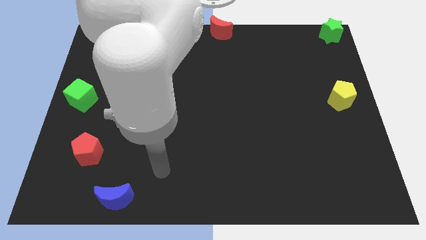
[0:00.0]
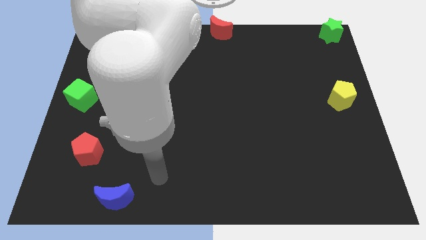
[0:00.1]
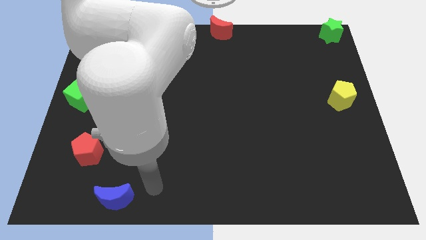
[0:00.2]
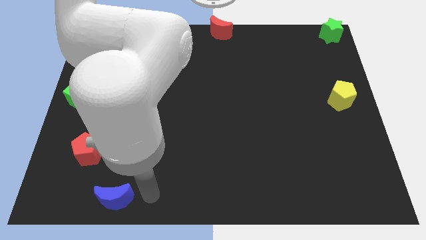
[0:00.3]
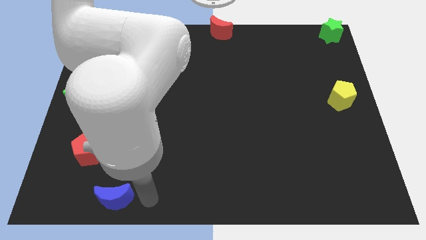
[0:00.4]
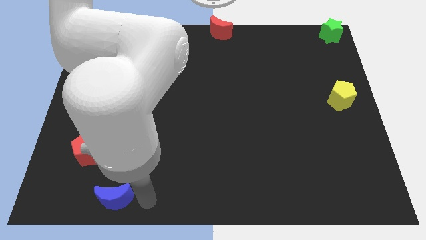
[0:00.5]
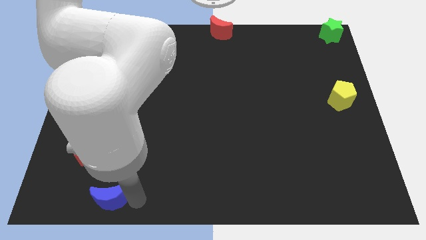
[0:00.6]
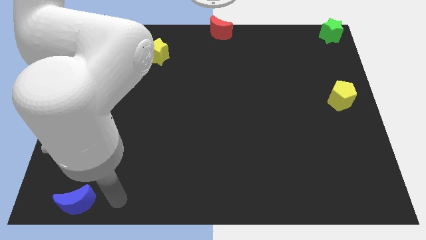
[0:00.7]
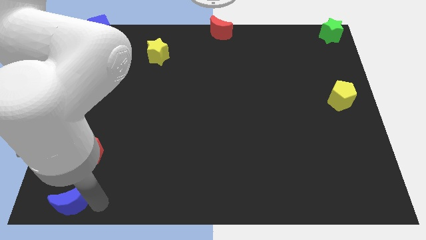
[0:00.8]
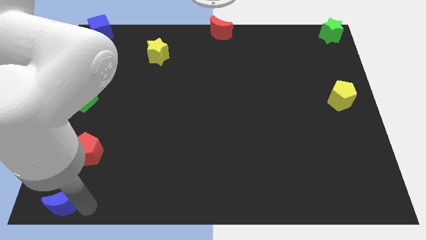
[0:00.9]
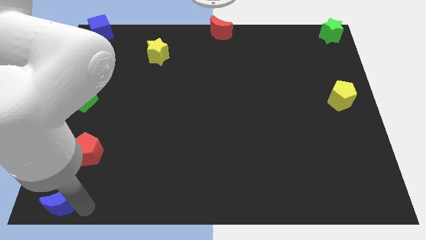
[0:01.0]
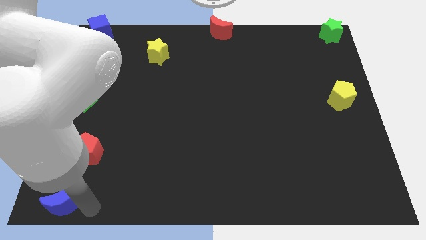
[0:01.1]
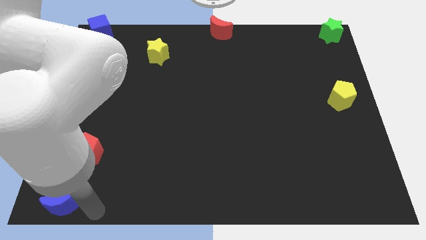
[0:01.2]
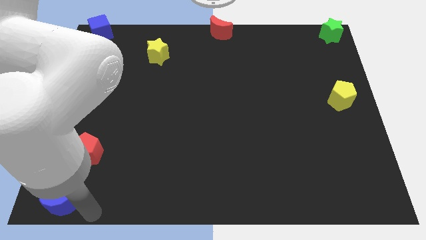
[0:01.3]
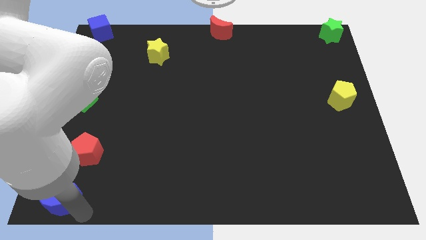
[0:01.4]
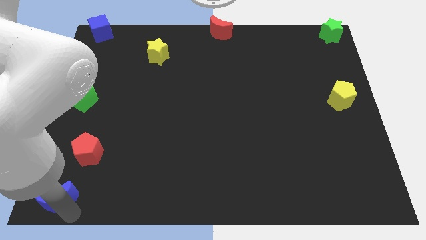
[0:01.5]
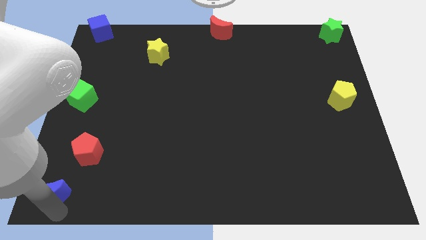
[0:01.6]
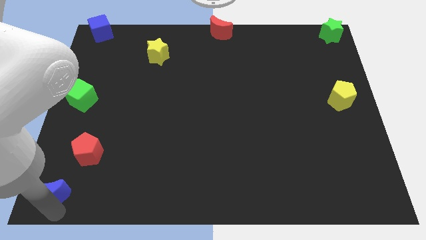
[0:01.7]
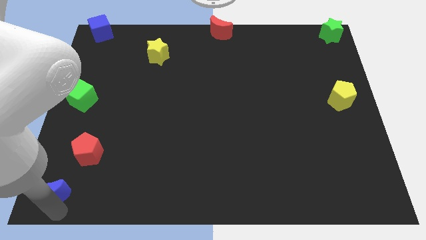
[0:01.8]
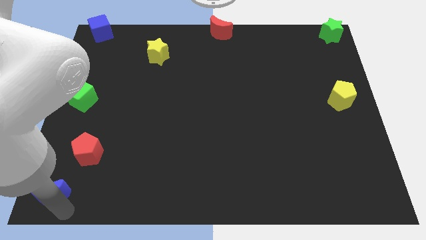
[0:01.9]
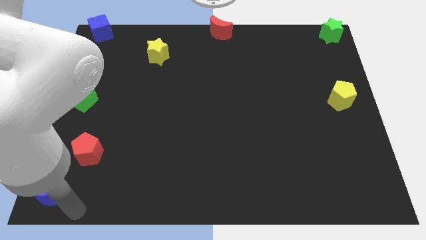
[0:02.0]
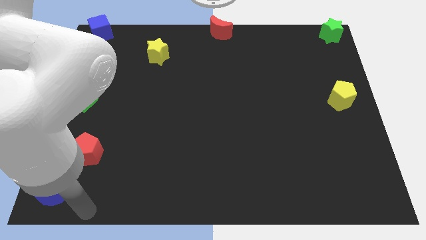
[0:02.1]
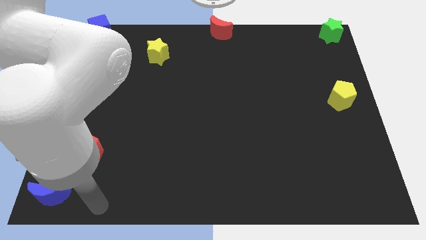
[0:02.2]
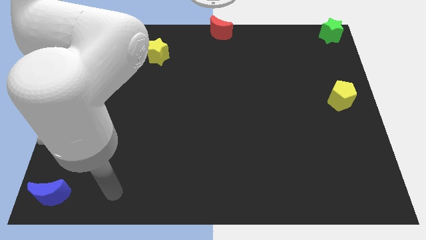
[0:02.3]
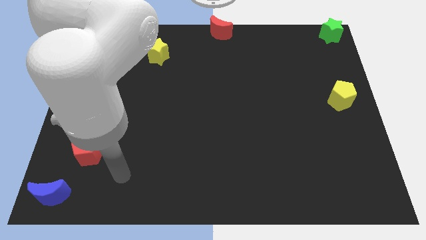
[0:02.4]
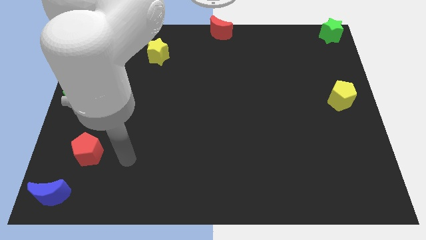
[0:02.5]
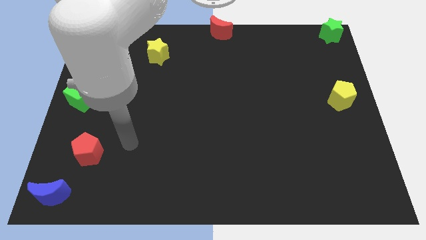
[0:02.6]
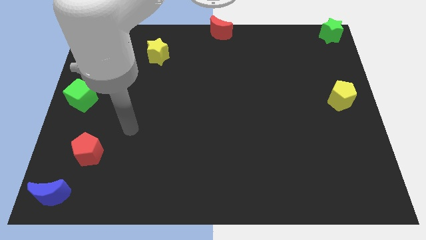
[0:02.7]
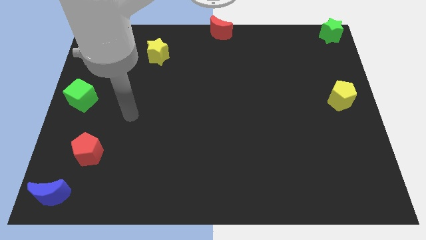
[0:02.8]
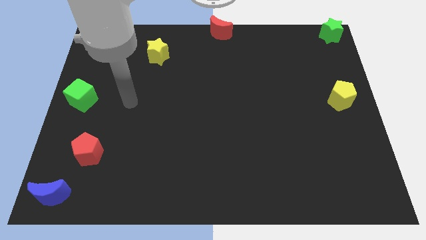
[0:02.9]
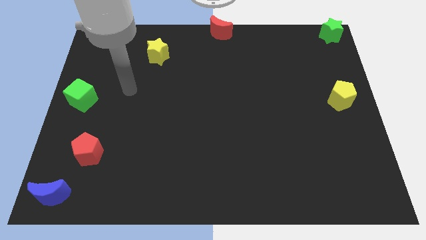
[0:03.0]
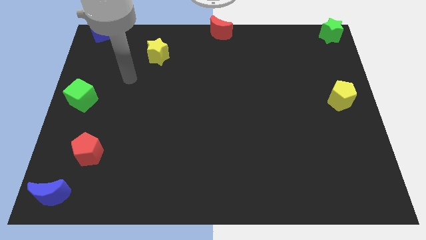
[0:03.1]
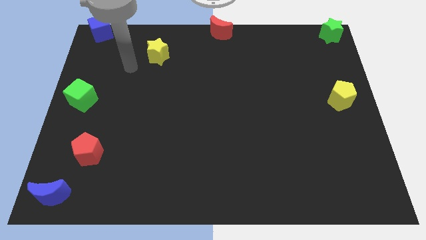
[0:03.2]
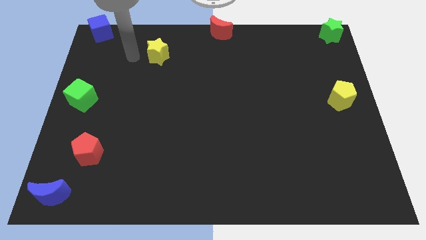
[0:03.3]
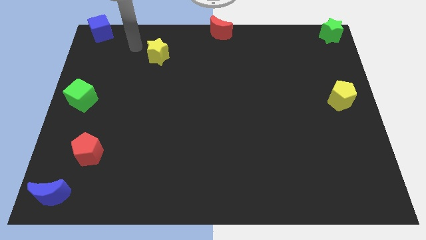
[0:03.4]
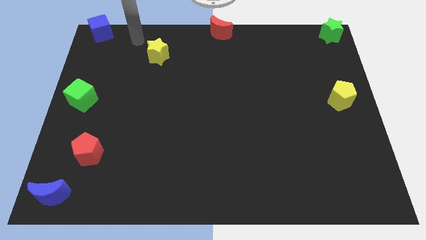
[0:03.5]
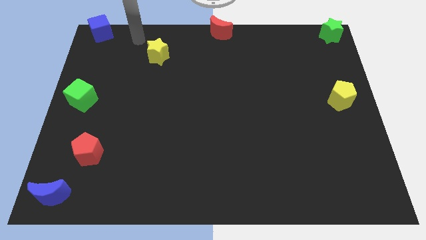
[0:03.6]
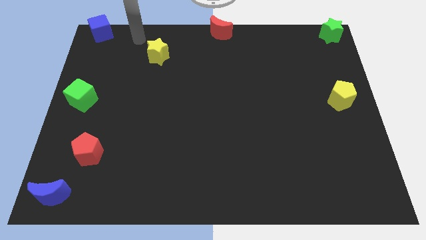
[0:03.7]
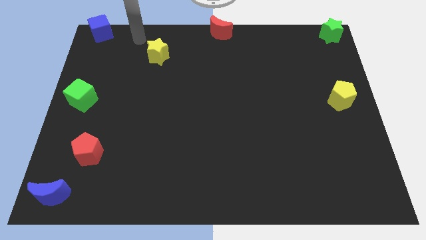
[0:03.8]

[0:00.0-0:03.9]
move the blue crescent to the left bottom corner of the board

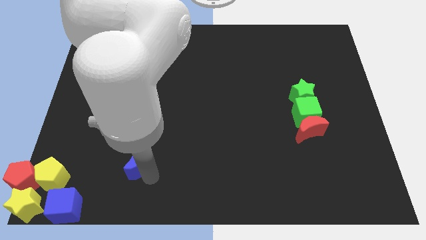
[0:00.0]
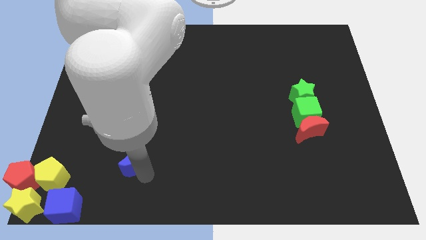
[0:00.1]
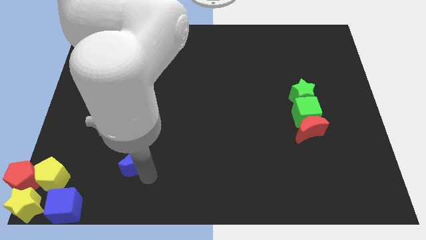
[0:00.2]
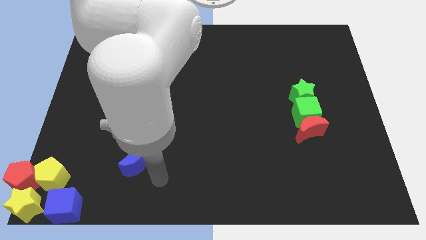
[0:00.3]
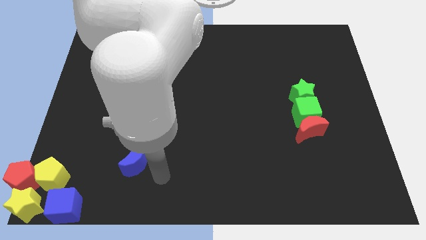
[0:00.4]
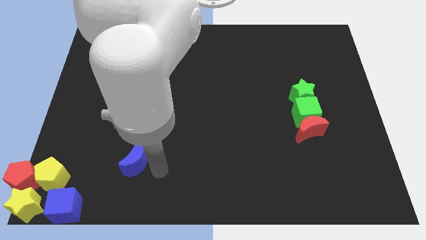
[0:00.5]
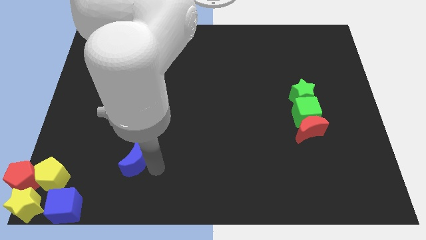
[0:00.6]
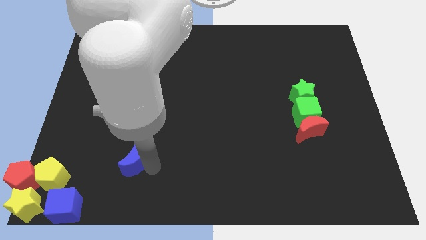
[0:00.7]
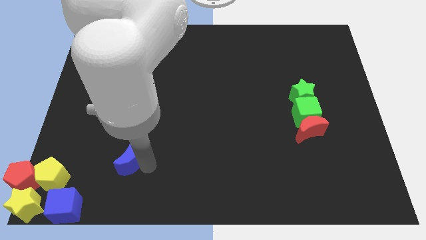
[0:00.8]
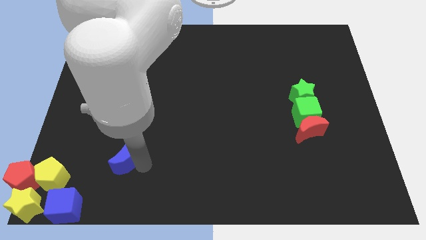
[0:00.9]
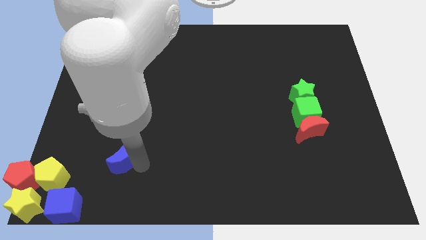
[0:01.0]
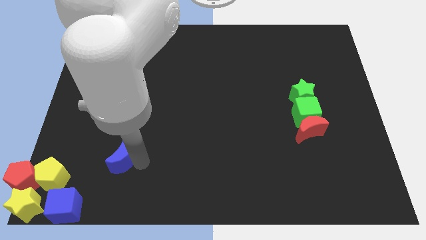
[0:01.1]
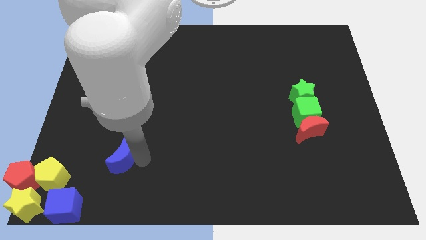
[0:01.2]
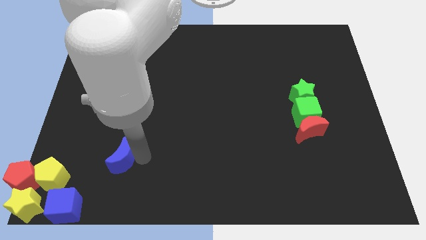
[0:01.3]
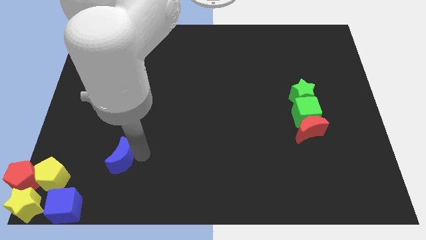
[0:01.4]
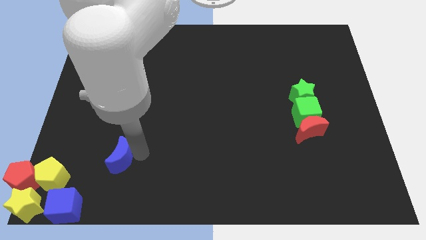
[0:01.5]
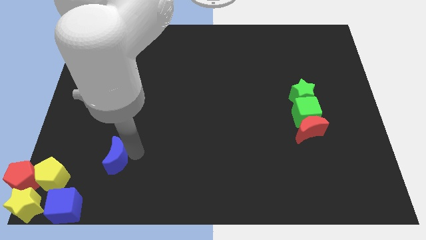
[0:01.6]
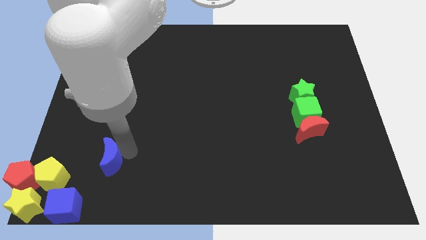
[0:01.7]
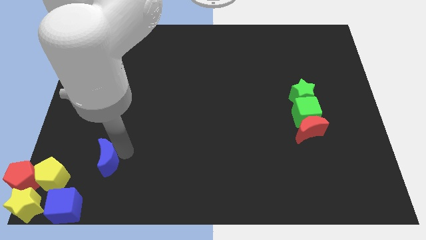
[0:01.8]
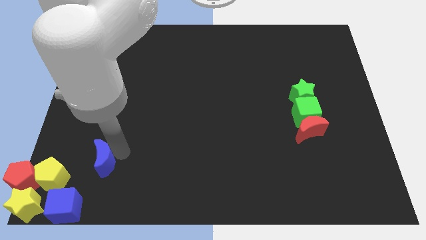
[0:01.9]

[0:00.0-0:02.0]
move the blue moon towards group of blocks

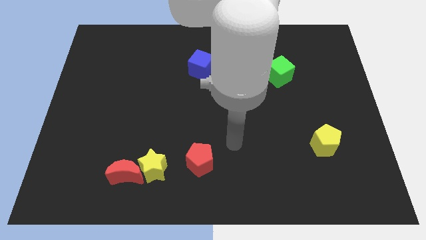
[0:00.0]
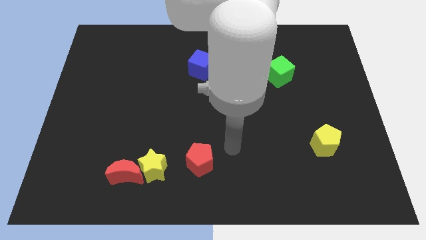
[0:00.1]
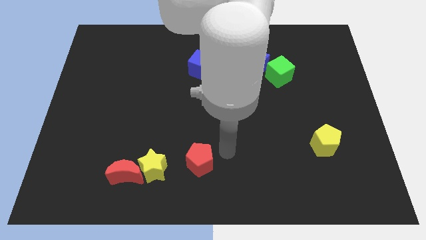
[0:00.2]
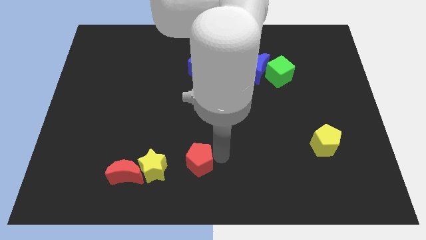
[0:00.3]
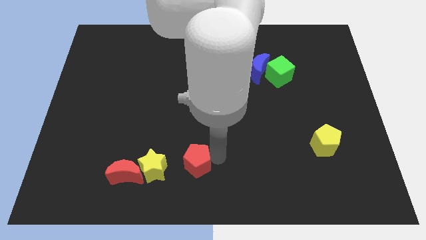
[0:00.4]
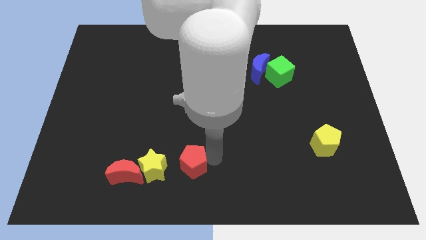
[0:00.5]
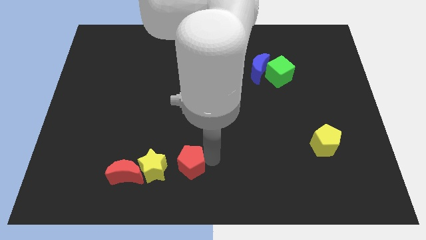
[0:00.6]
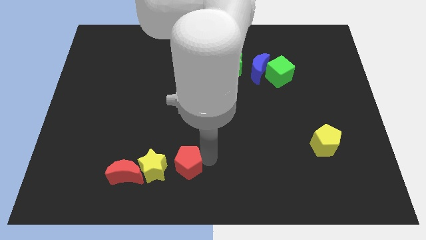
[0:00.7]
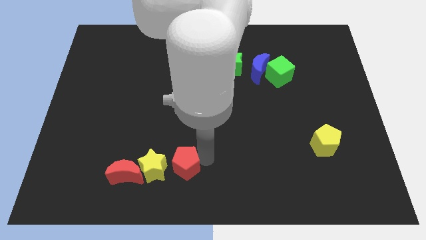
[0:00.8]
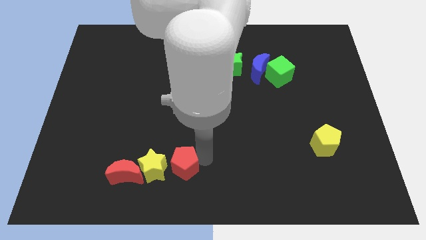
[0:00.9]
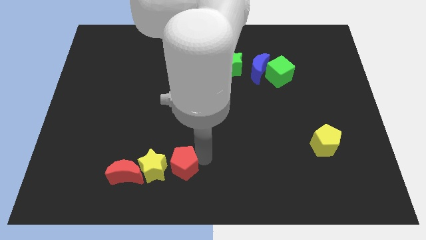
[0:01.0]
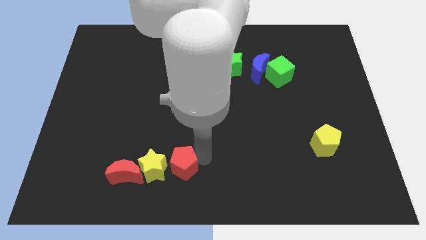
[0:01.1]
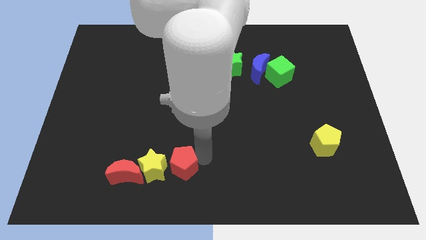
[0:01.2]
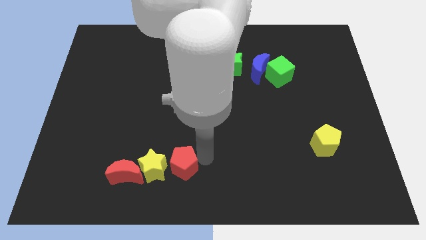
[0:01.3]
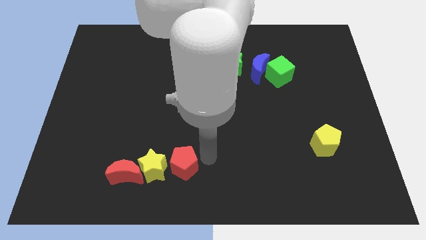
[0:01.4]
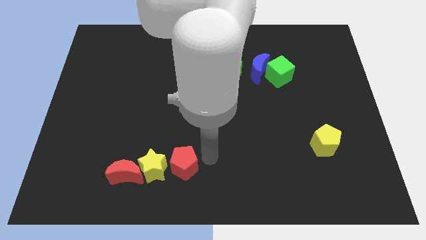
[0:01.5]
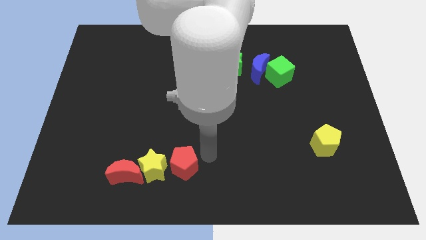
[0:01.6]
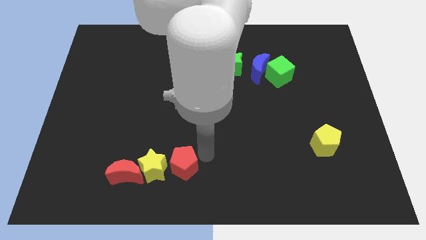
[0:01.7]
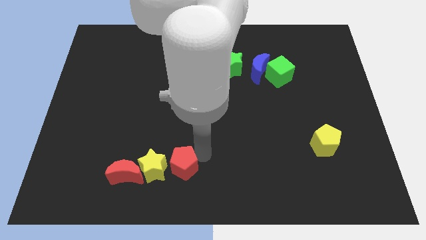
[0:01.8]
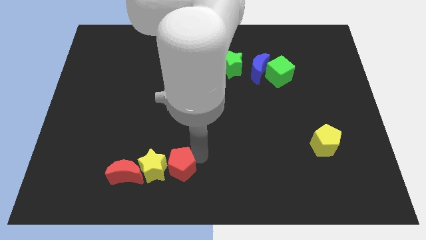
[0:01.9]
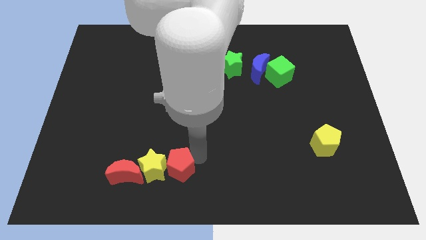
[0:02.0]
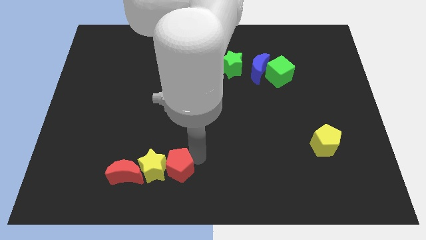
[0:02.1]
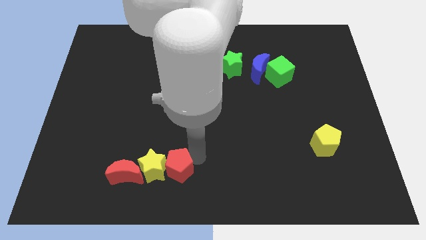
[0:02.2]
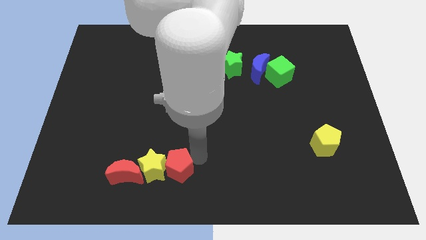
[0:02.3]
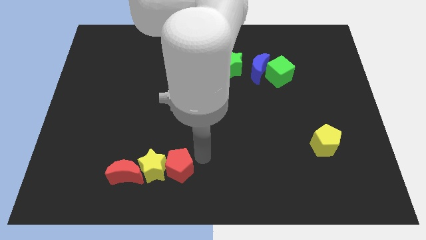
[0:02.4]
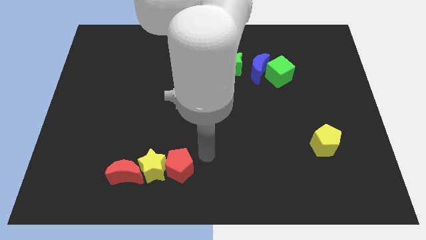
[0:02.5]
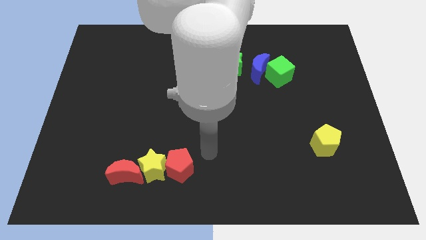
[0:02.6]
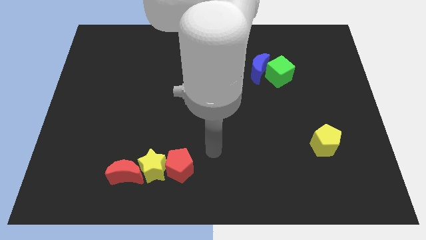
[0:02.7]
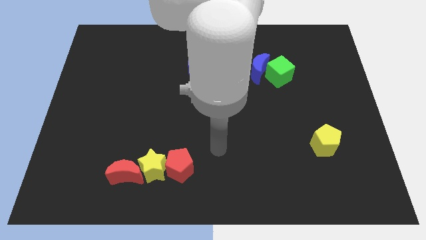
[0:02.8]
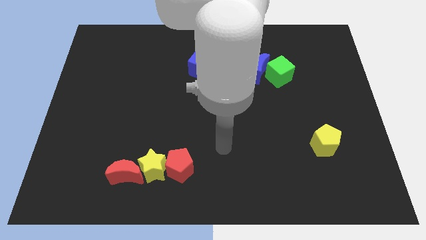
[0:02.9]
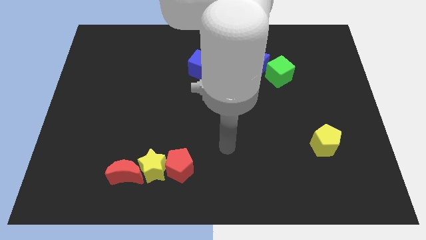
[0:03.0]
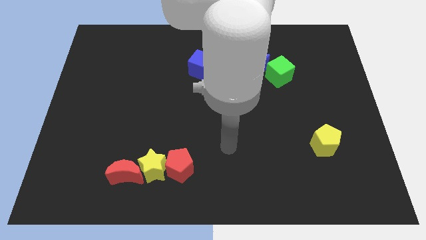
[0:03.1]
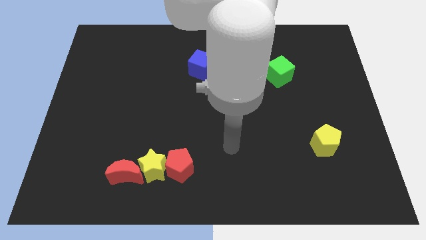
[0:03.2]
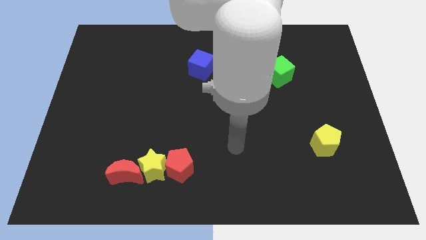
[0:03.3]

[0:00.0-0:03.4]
push the red pentagon into the yellow star
